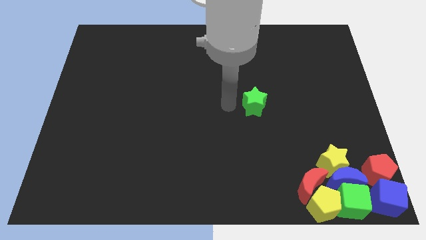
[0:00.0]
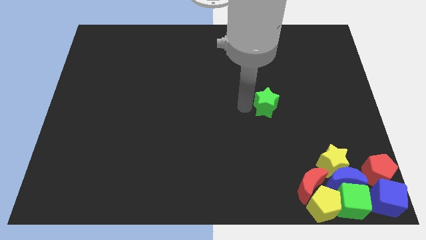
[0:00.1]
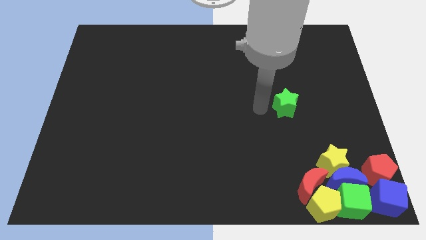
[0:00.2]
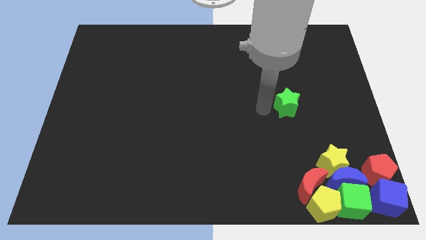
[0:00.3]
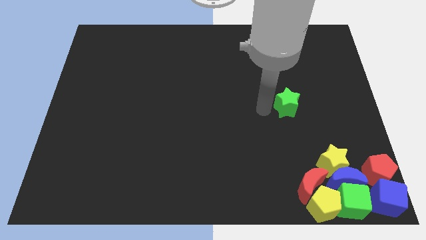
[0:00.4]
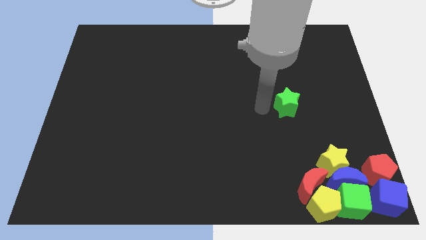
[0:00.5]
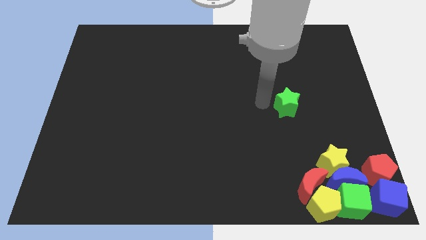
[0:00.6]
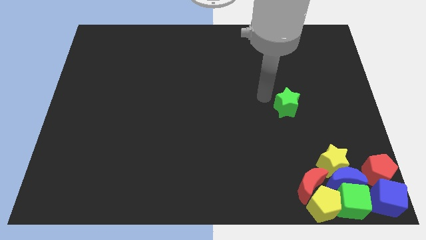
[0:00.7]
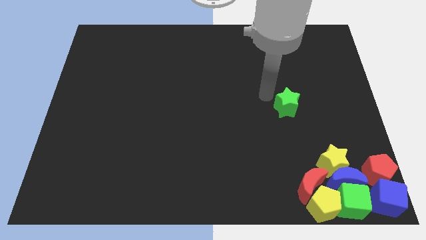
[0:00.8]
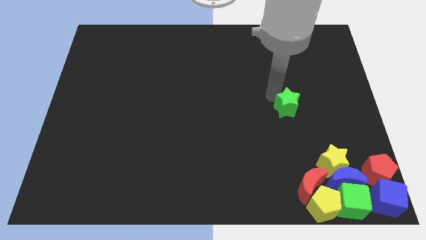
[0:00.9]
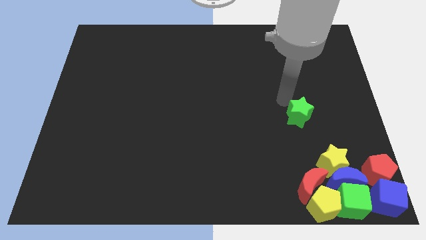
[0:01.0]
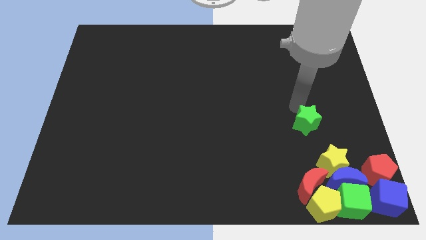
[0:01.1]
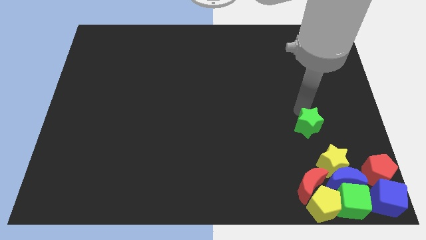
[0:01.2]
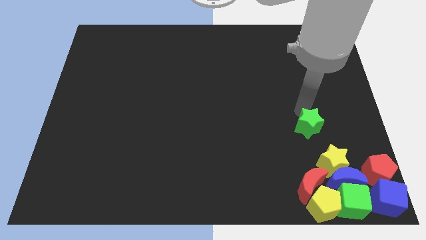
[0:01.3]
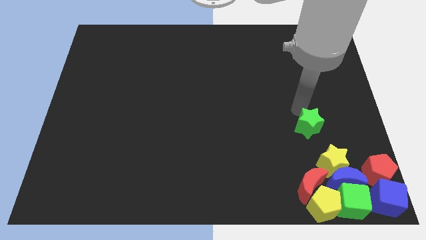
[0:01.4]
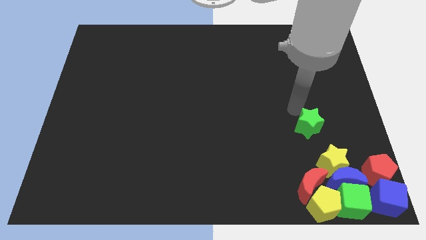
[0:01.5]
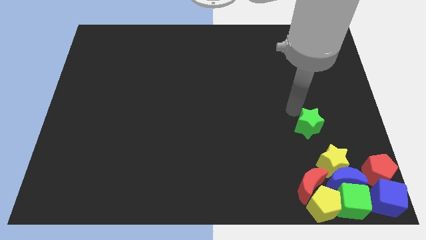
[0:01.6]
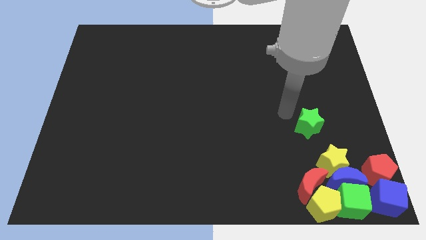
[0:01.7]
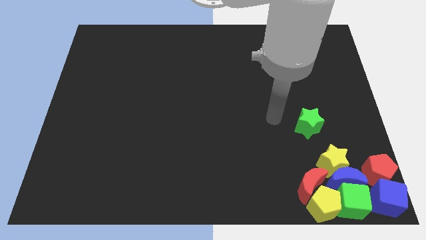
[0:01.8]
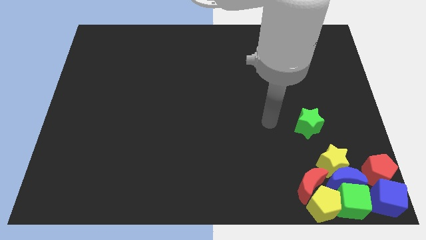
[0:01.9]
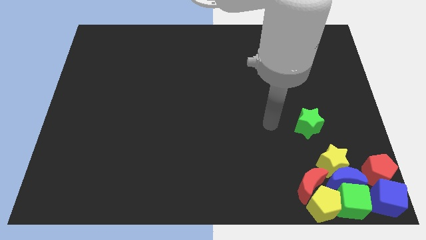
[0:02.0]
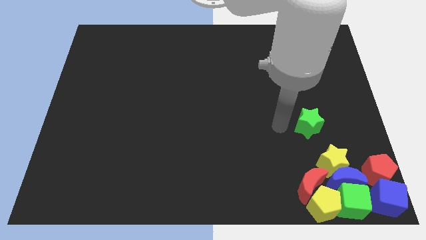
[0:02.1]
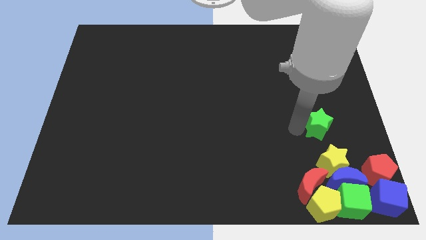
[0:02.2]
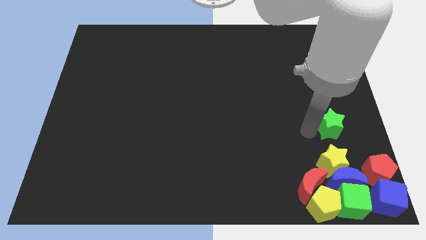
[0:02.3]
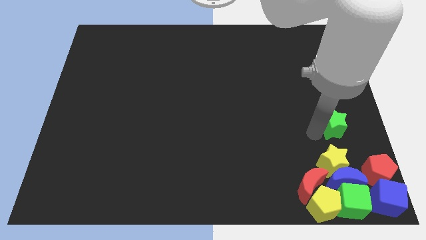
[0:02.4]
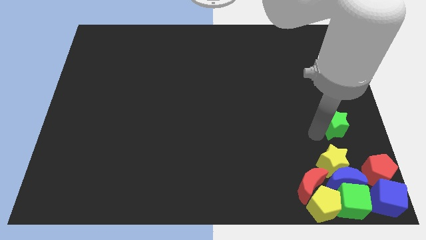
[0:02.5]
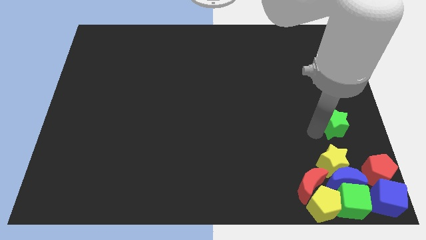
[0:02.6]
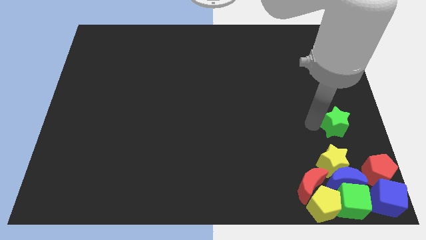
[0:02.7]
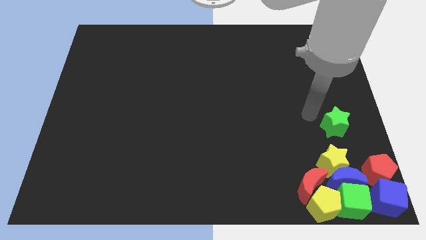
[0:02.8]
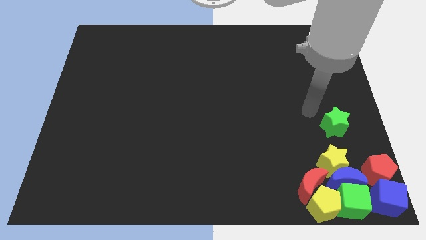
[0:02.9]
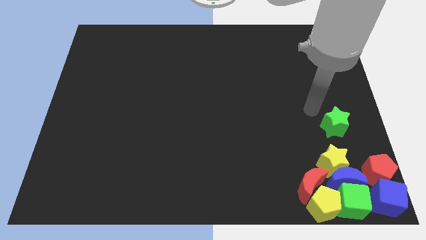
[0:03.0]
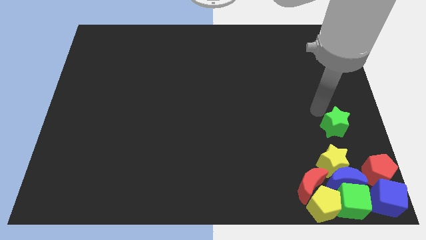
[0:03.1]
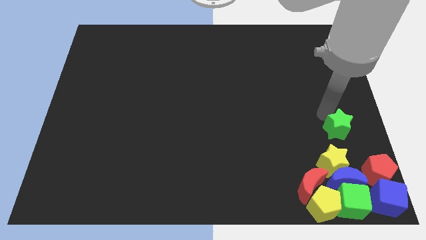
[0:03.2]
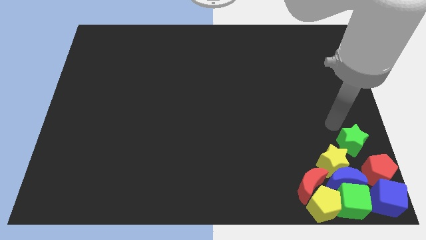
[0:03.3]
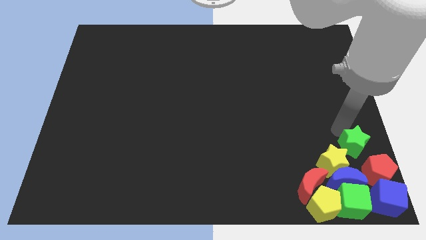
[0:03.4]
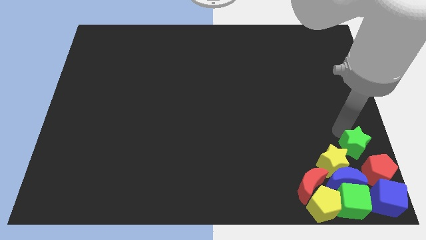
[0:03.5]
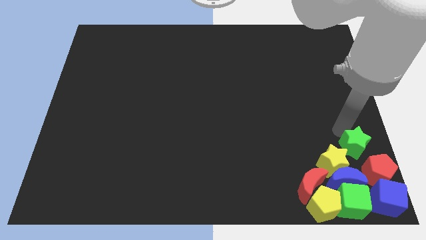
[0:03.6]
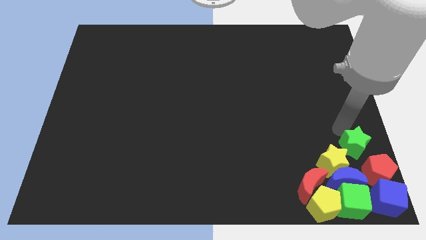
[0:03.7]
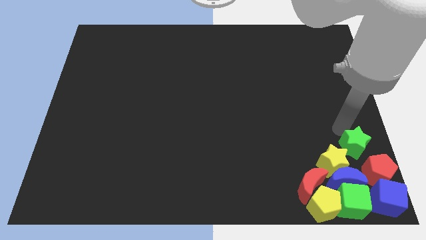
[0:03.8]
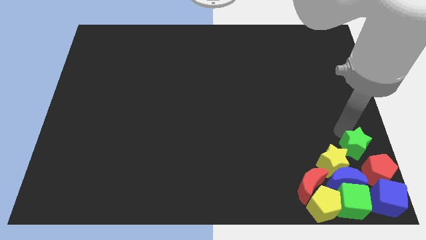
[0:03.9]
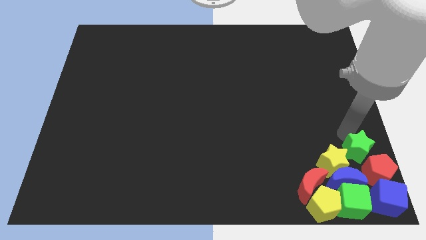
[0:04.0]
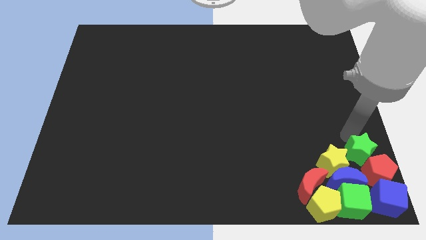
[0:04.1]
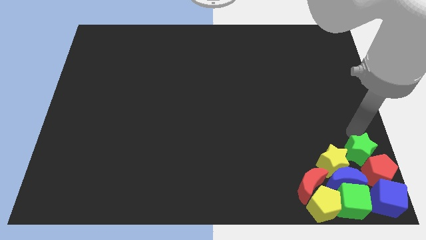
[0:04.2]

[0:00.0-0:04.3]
push the green star towards the group of blocks

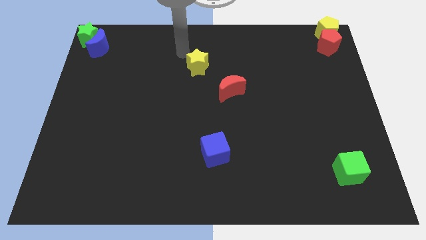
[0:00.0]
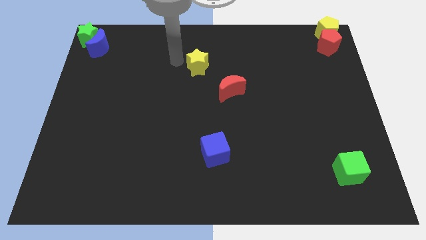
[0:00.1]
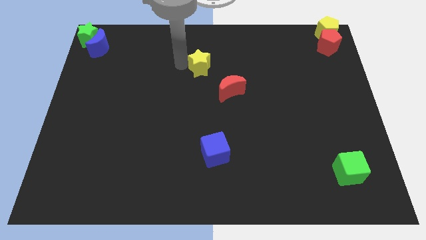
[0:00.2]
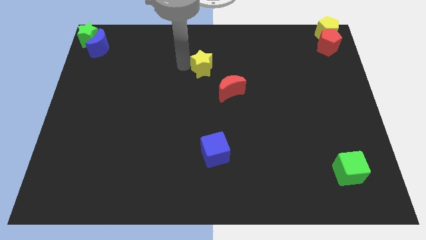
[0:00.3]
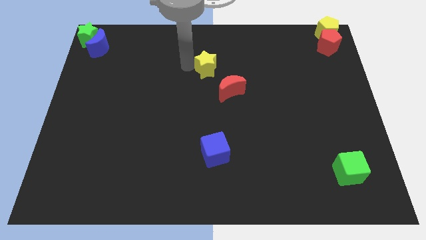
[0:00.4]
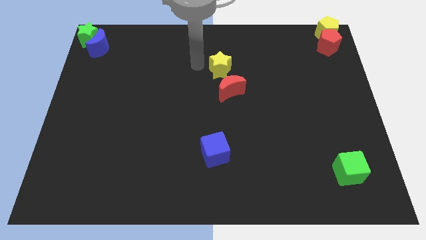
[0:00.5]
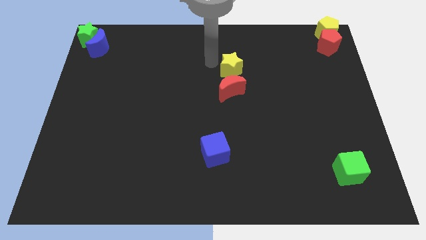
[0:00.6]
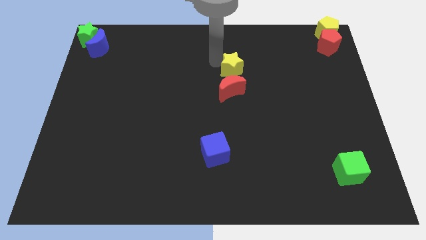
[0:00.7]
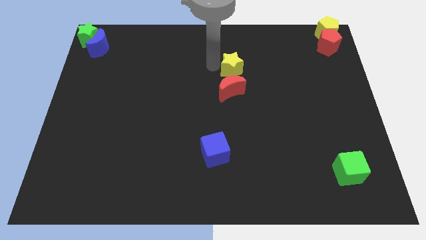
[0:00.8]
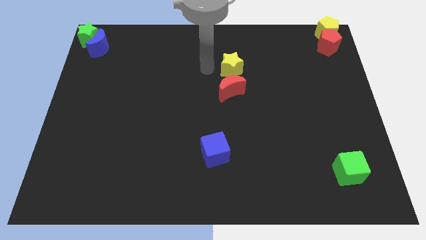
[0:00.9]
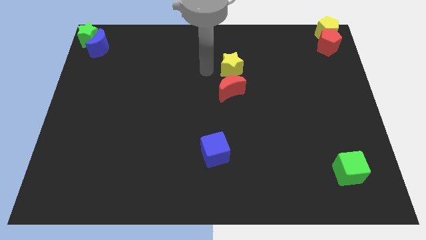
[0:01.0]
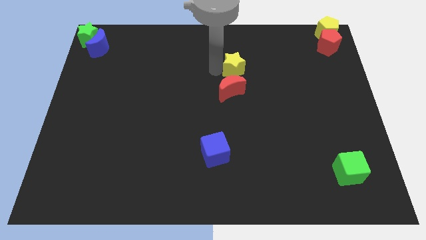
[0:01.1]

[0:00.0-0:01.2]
slightly push the yellow star to the top of the red crescent

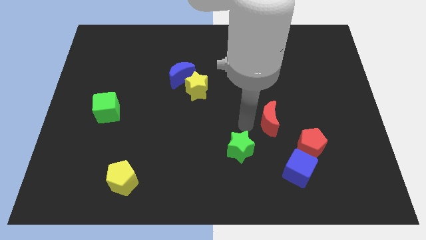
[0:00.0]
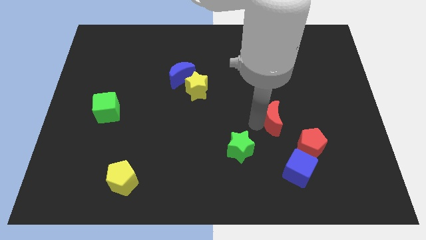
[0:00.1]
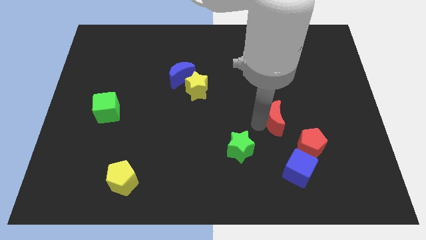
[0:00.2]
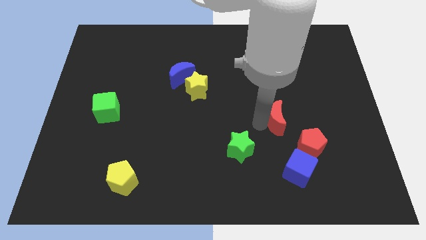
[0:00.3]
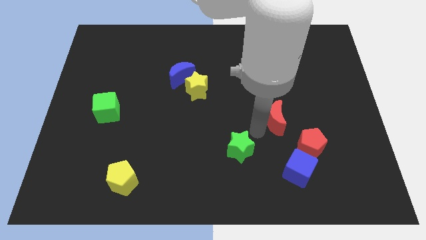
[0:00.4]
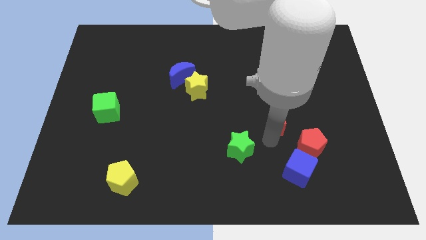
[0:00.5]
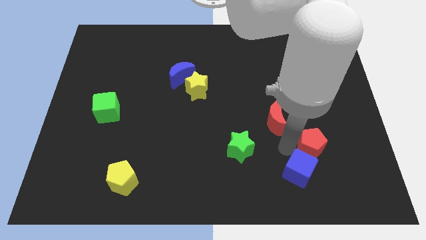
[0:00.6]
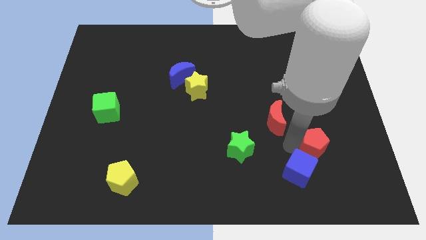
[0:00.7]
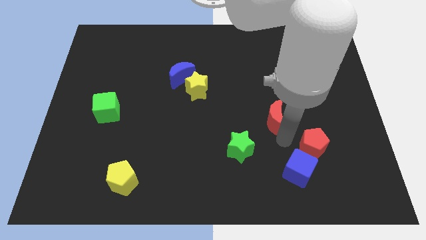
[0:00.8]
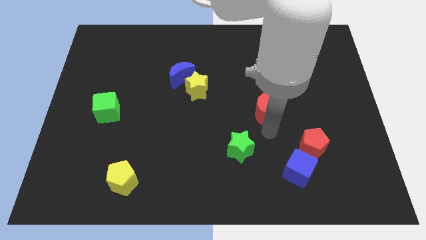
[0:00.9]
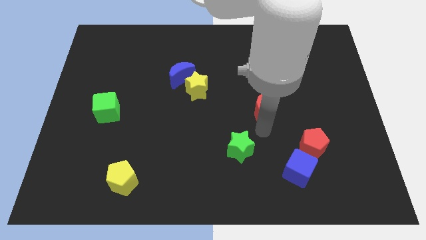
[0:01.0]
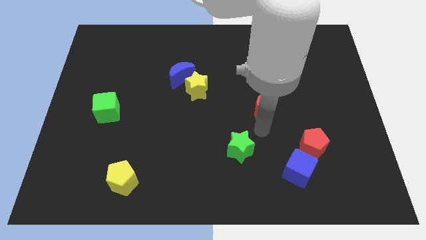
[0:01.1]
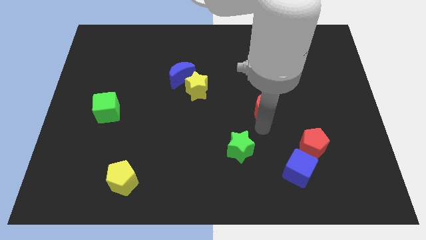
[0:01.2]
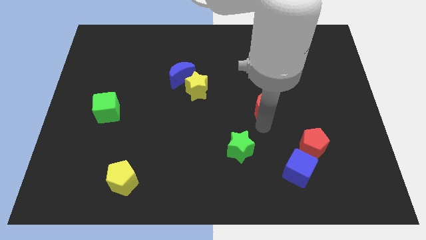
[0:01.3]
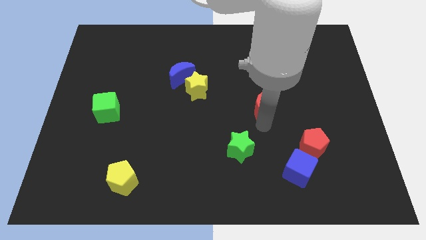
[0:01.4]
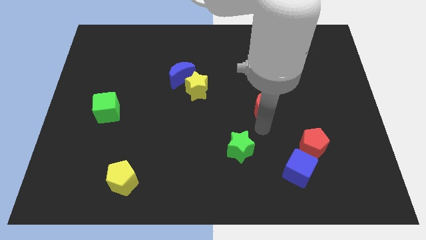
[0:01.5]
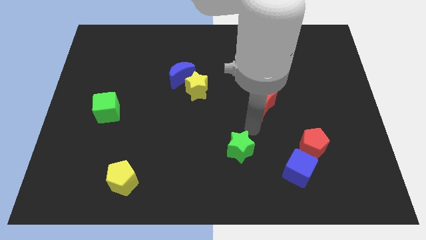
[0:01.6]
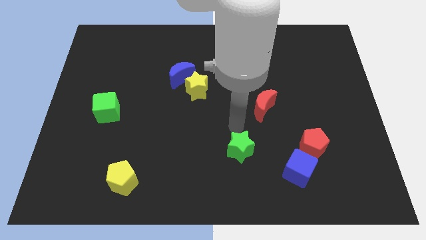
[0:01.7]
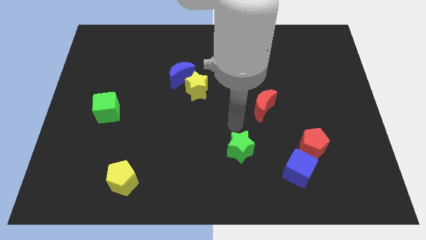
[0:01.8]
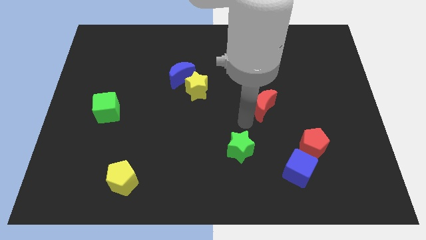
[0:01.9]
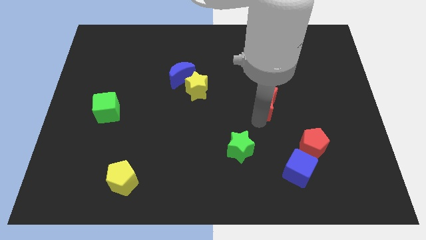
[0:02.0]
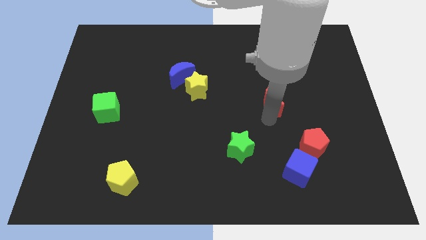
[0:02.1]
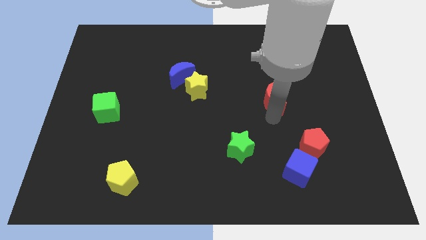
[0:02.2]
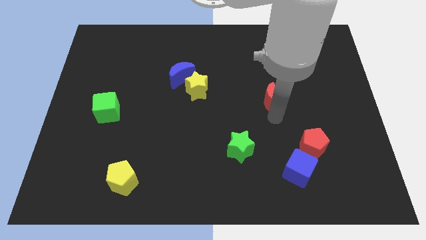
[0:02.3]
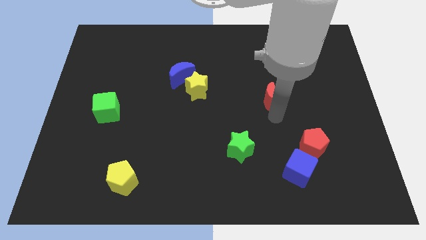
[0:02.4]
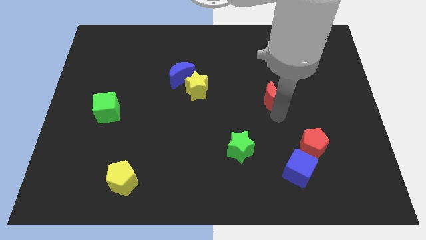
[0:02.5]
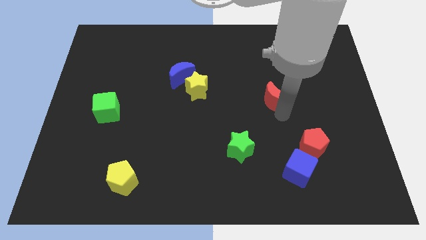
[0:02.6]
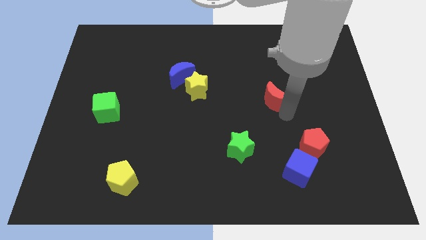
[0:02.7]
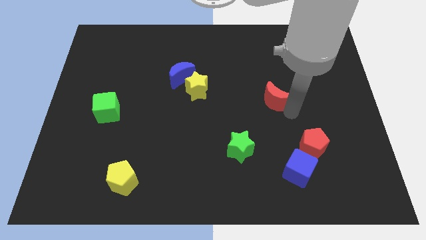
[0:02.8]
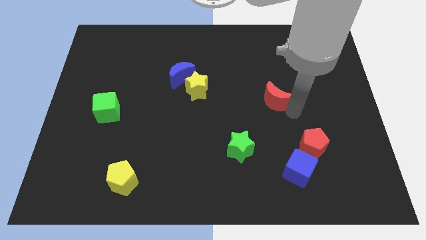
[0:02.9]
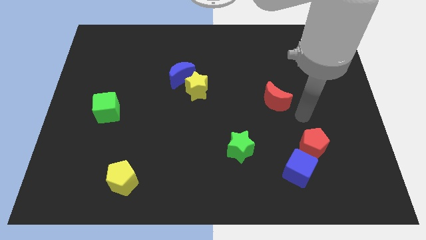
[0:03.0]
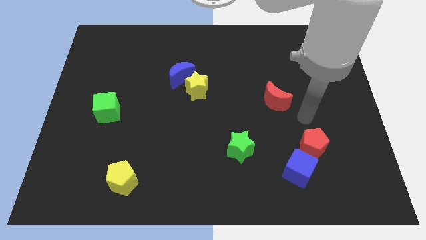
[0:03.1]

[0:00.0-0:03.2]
separate red moon from green star

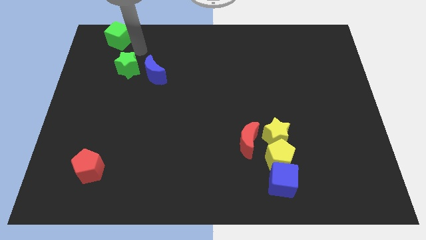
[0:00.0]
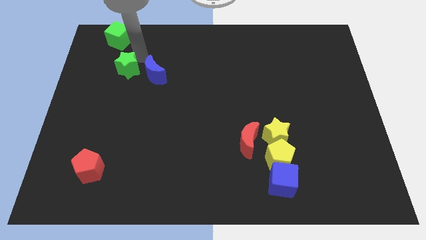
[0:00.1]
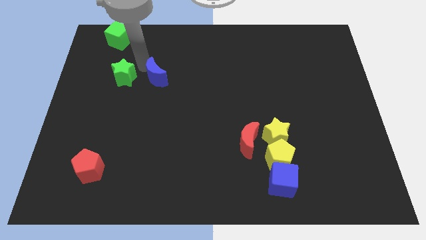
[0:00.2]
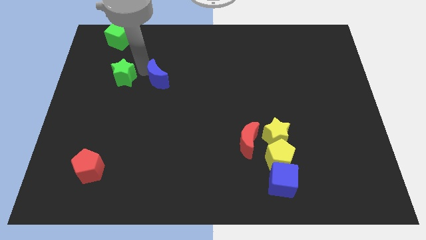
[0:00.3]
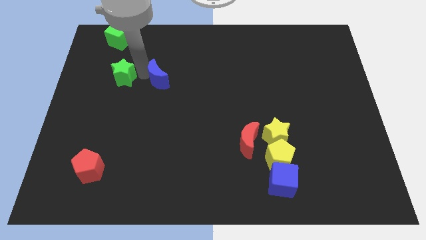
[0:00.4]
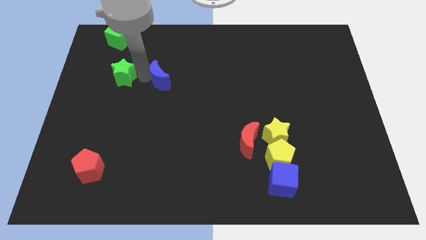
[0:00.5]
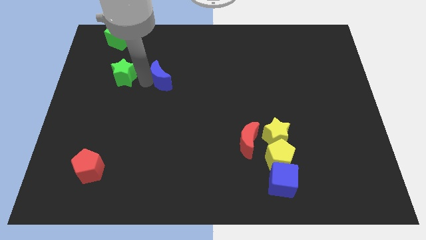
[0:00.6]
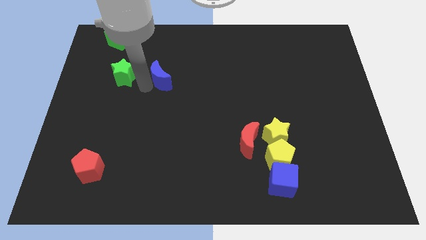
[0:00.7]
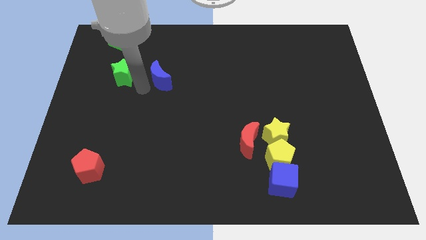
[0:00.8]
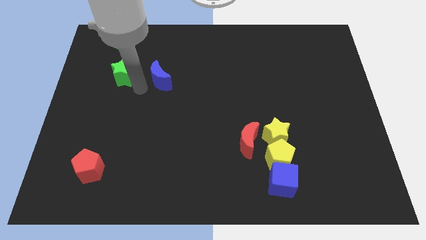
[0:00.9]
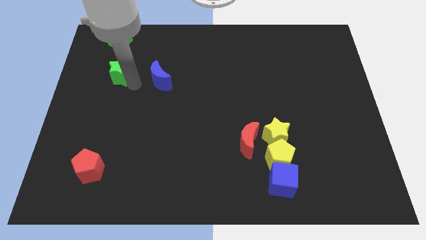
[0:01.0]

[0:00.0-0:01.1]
slightly move green star along with blue crescent
